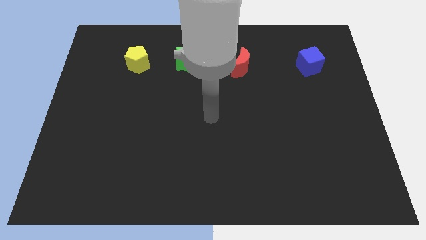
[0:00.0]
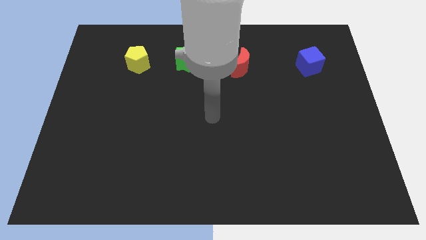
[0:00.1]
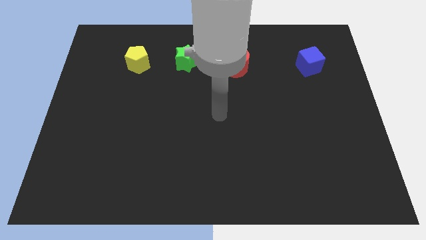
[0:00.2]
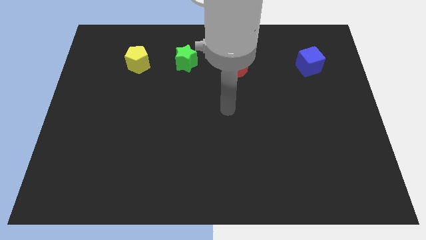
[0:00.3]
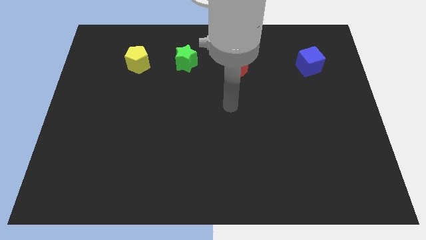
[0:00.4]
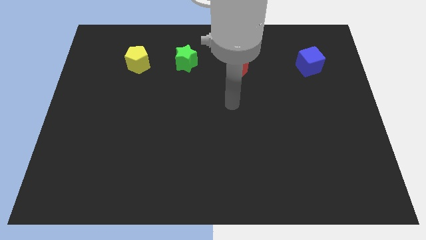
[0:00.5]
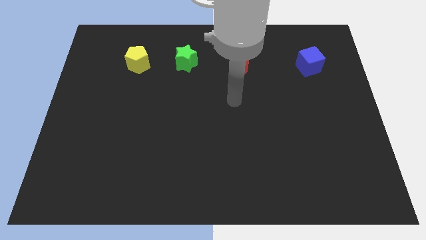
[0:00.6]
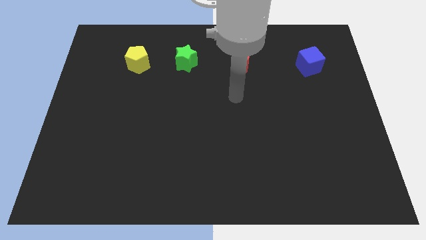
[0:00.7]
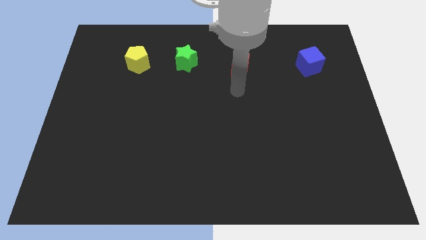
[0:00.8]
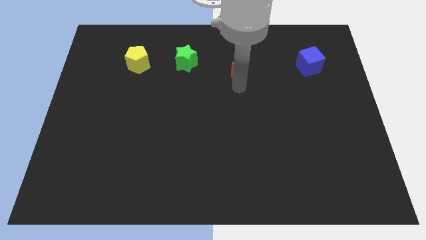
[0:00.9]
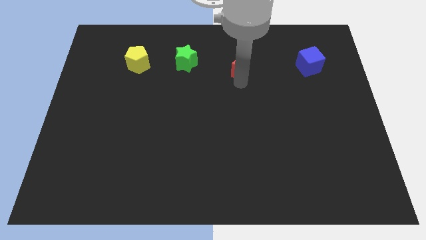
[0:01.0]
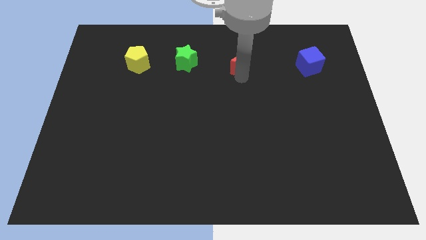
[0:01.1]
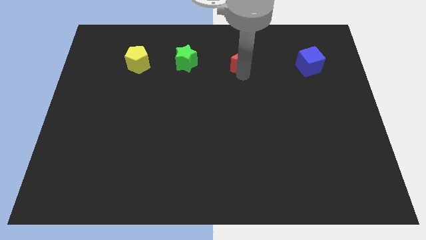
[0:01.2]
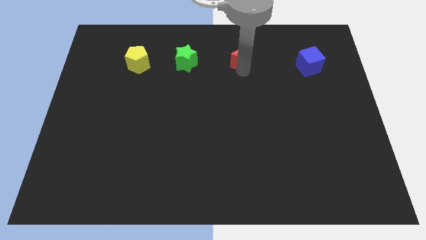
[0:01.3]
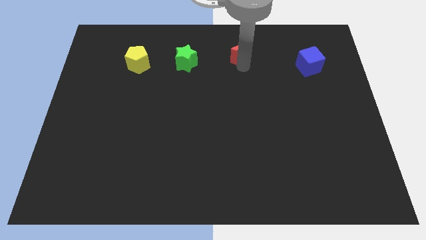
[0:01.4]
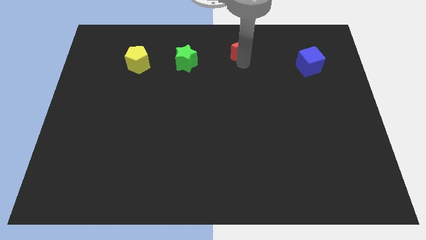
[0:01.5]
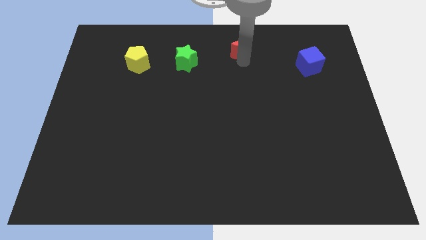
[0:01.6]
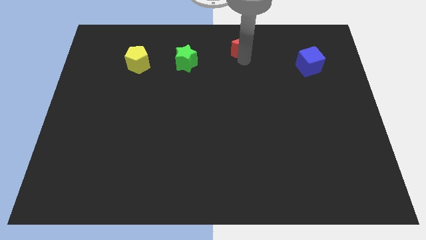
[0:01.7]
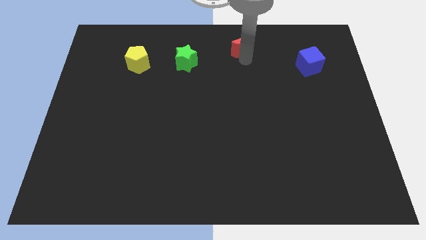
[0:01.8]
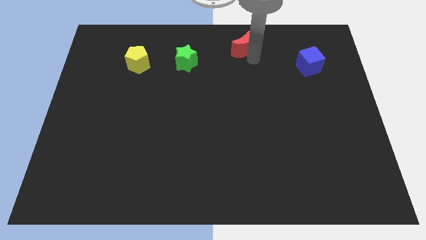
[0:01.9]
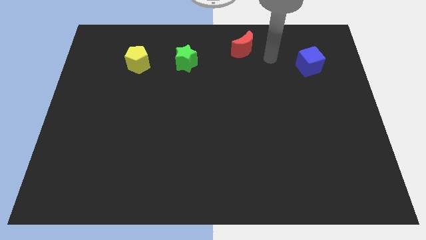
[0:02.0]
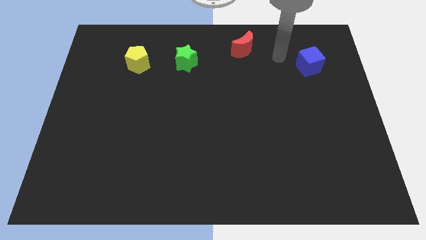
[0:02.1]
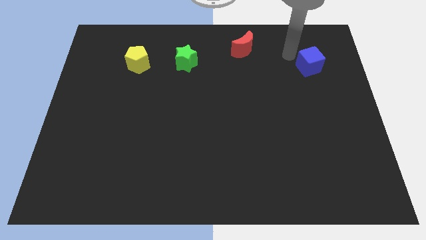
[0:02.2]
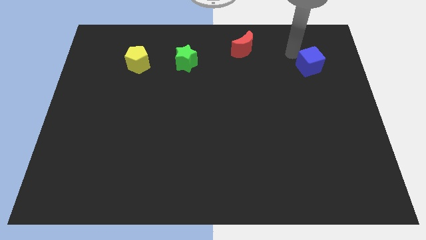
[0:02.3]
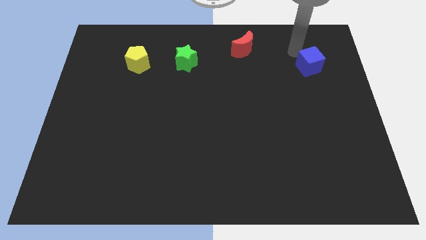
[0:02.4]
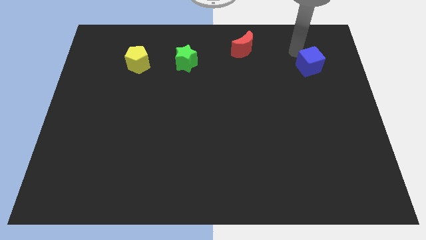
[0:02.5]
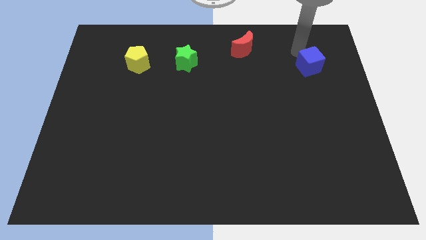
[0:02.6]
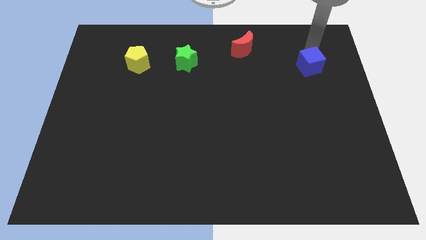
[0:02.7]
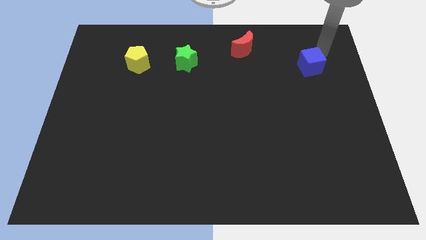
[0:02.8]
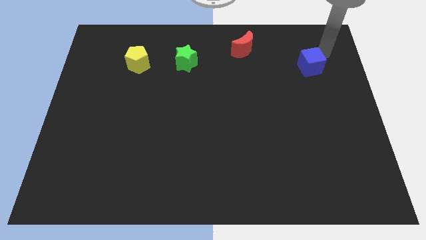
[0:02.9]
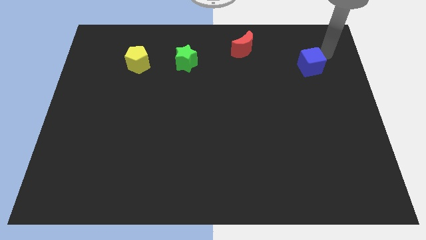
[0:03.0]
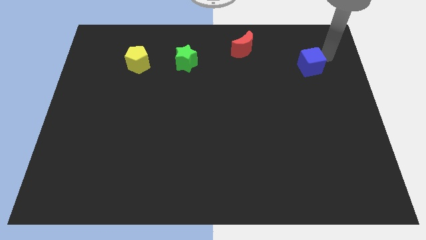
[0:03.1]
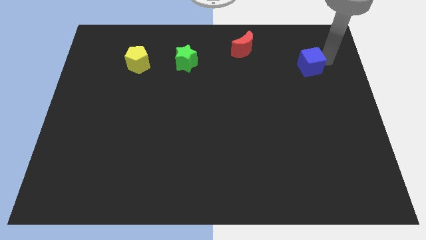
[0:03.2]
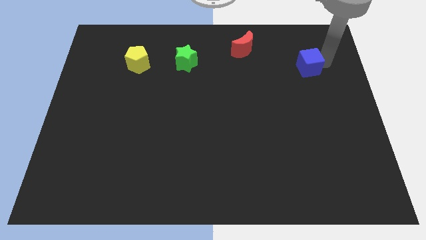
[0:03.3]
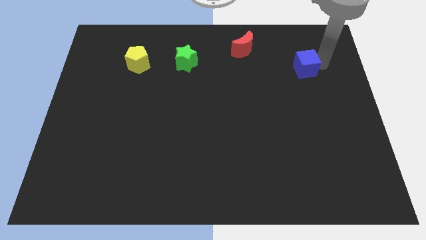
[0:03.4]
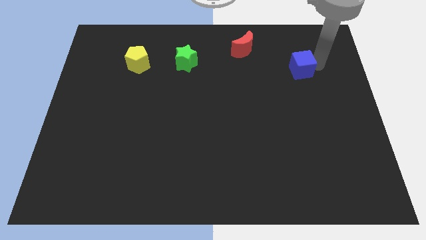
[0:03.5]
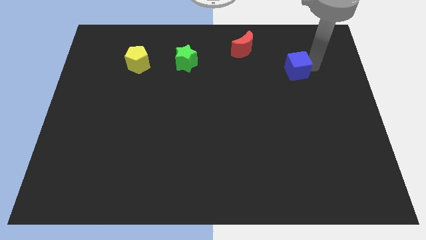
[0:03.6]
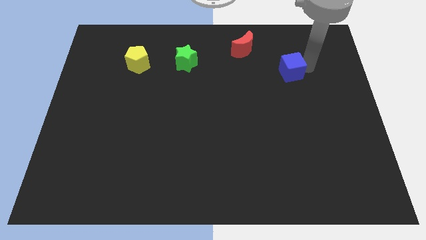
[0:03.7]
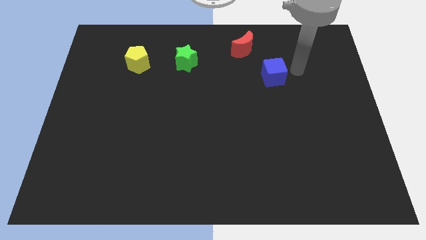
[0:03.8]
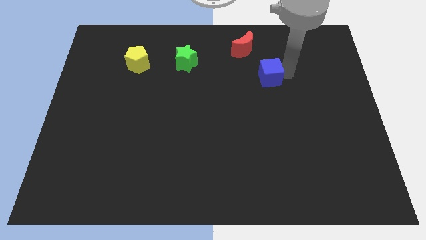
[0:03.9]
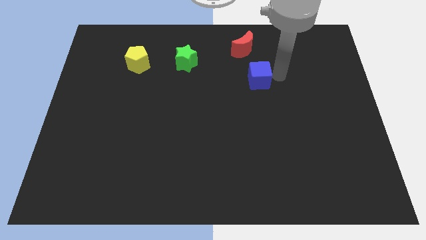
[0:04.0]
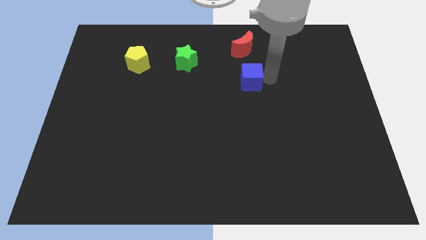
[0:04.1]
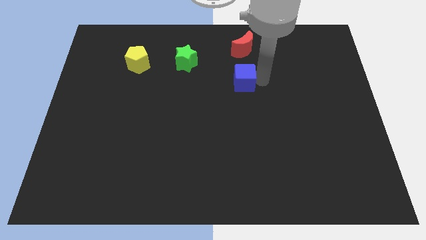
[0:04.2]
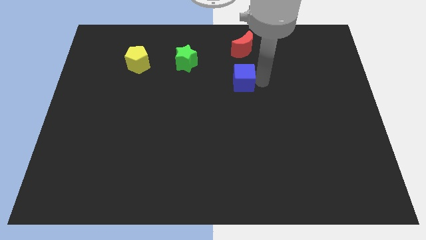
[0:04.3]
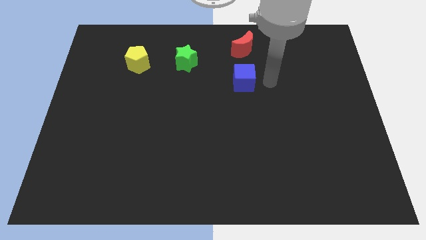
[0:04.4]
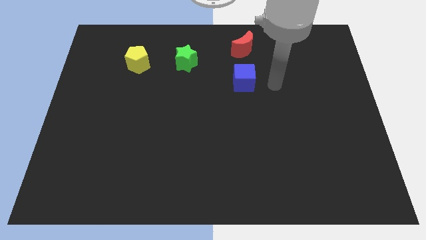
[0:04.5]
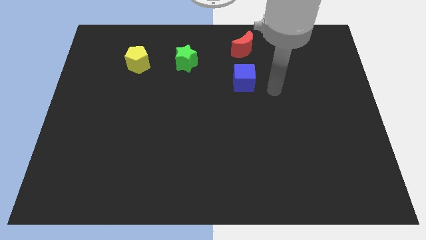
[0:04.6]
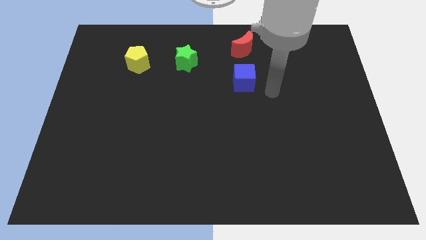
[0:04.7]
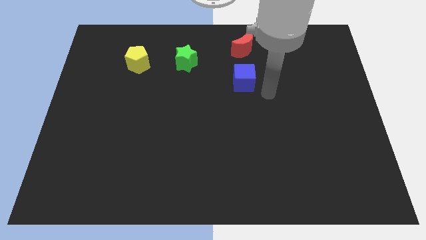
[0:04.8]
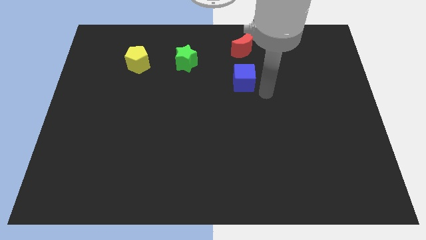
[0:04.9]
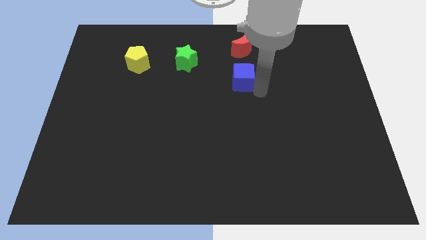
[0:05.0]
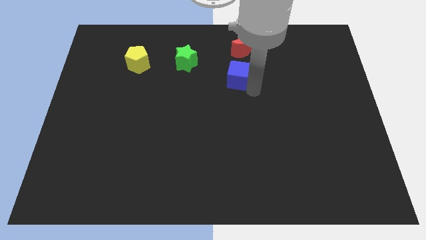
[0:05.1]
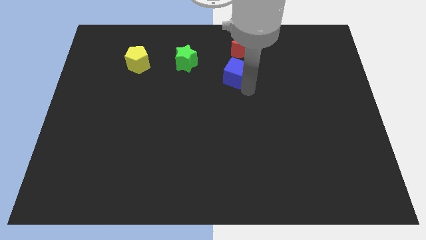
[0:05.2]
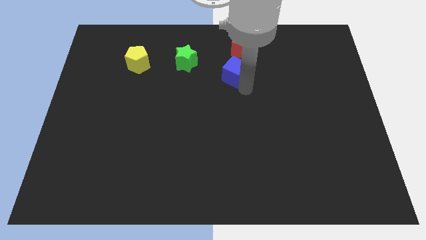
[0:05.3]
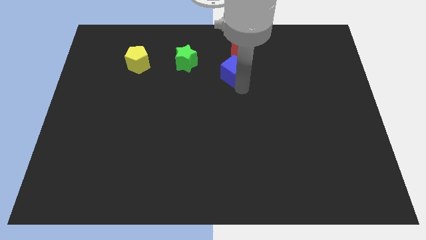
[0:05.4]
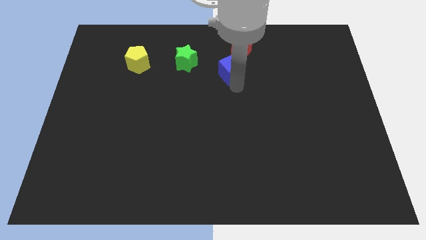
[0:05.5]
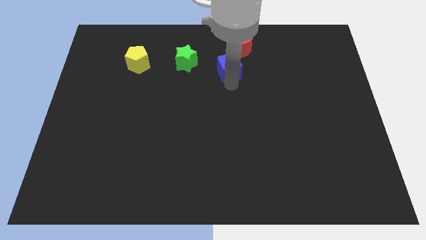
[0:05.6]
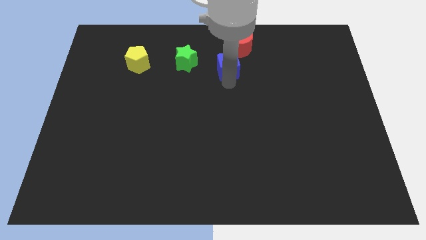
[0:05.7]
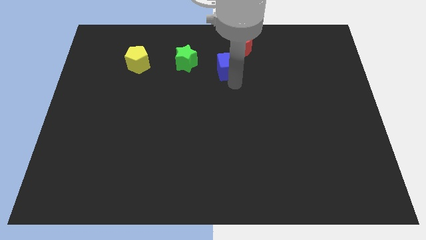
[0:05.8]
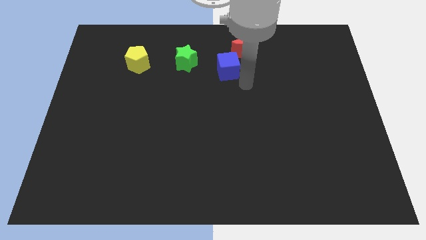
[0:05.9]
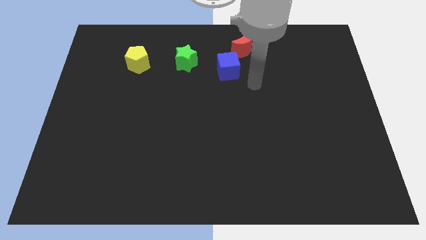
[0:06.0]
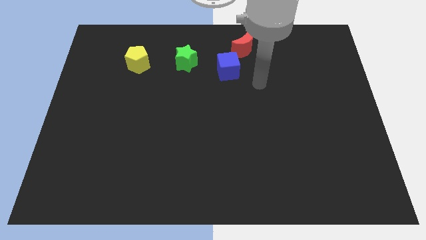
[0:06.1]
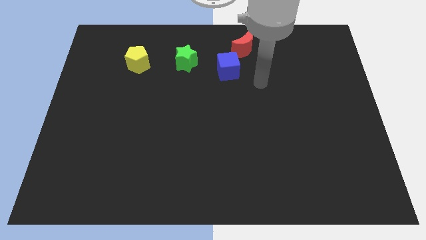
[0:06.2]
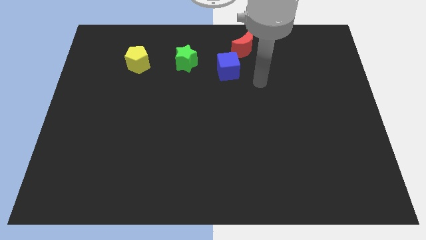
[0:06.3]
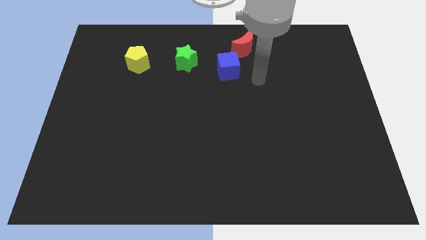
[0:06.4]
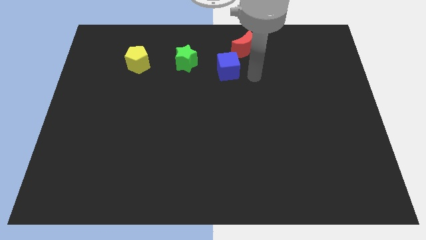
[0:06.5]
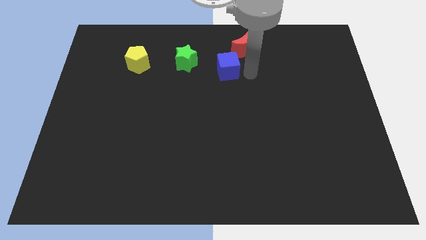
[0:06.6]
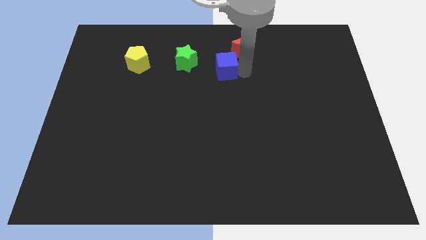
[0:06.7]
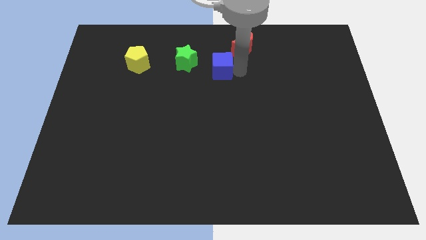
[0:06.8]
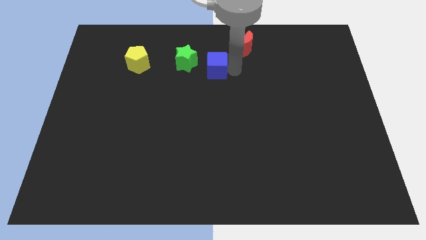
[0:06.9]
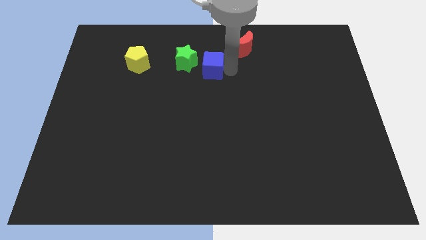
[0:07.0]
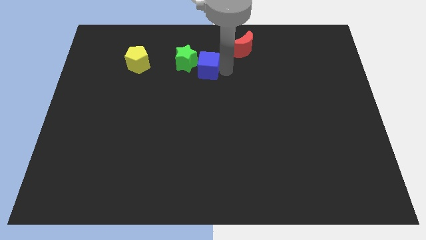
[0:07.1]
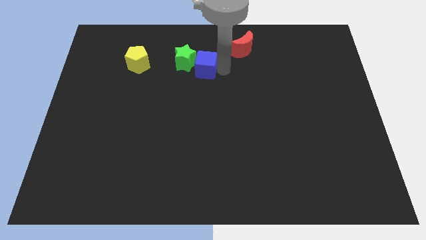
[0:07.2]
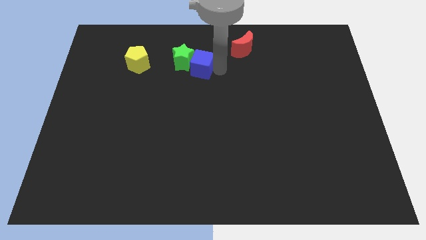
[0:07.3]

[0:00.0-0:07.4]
move the blue cube next to the green star

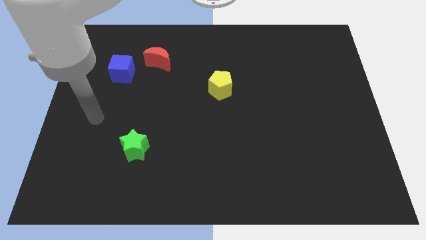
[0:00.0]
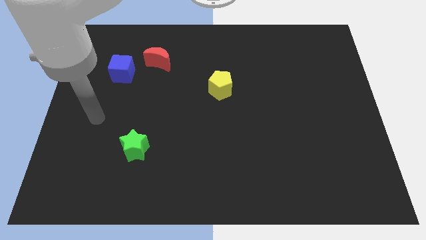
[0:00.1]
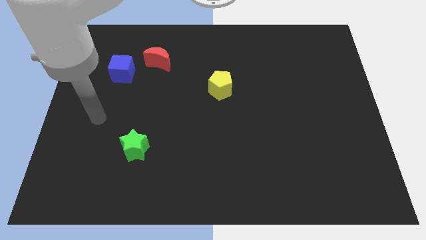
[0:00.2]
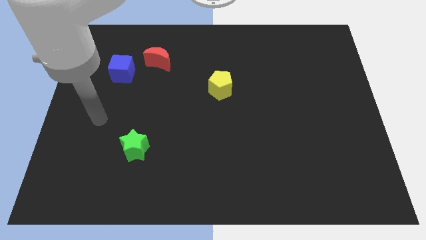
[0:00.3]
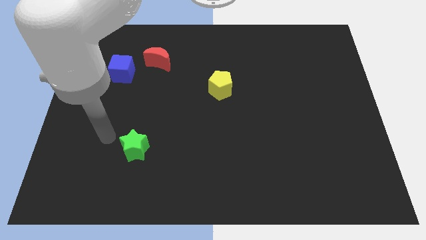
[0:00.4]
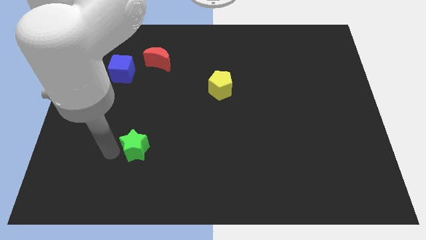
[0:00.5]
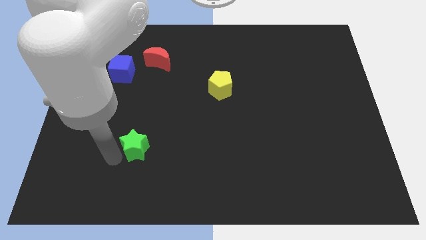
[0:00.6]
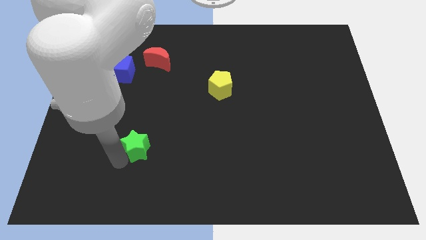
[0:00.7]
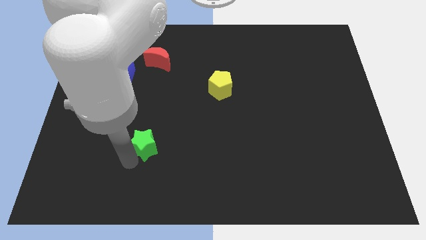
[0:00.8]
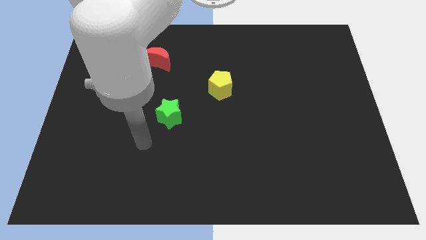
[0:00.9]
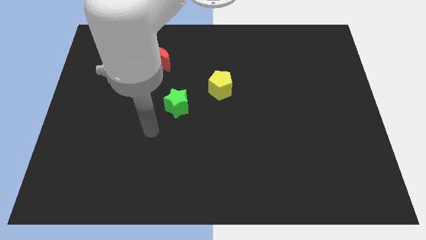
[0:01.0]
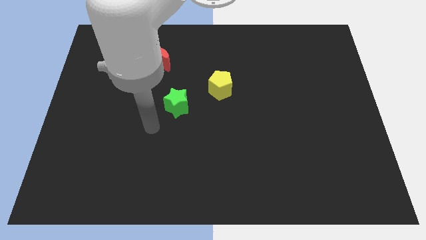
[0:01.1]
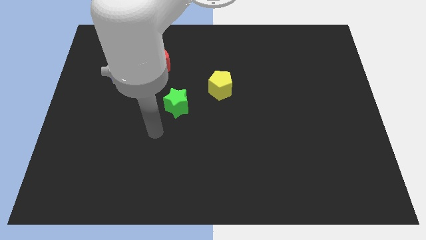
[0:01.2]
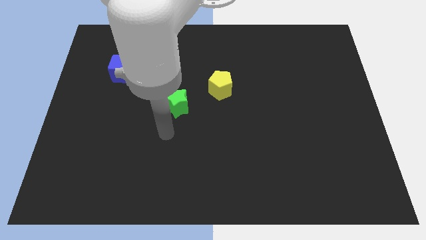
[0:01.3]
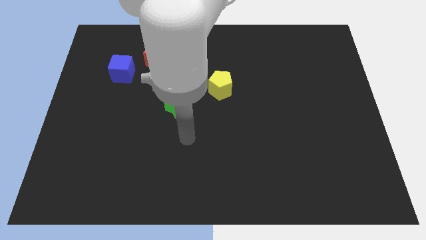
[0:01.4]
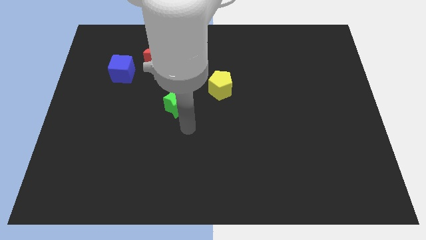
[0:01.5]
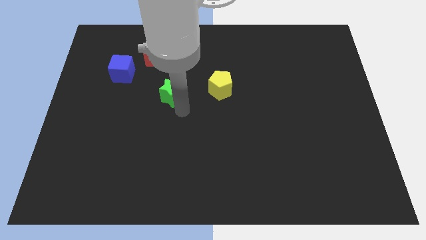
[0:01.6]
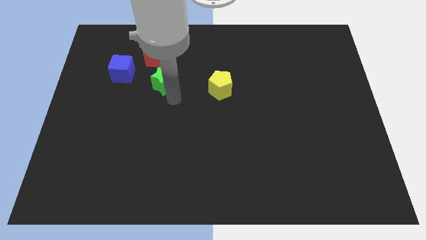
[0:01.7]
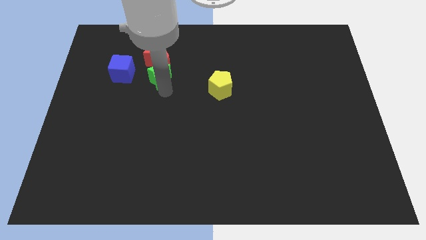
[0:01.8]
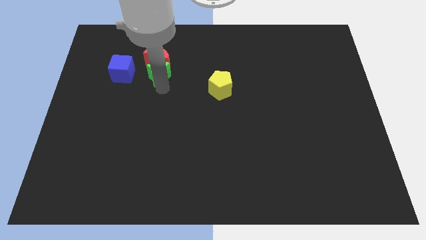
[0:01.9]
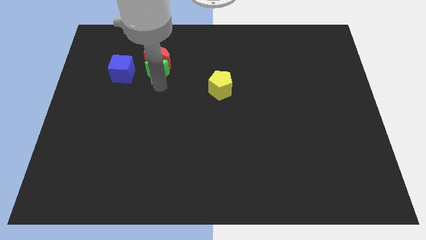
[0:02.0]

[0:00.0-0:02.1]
move the star close to the red moon
